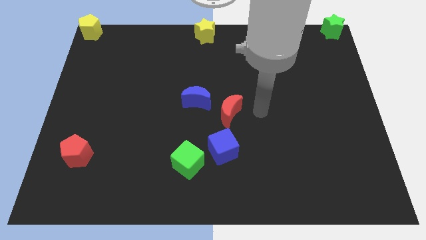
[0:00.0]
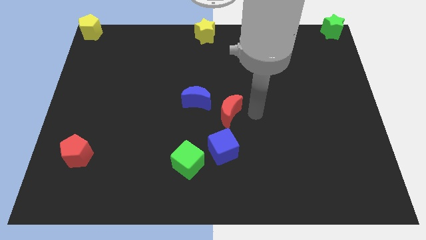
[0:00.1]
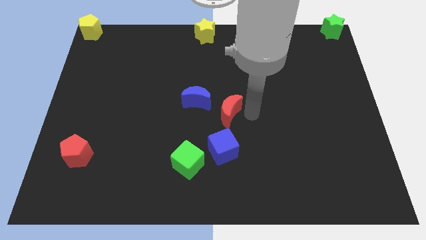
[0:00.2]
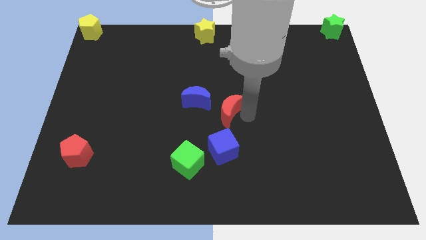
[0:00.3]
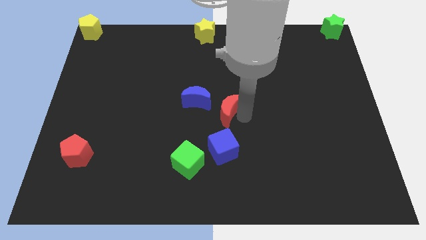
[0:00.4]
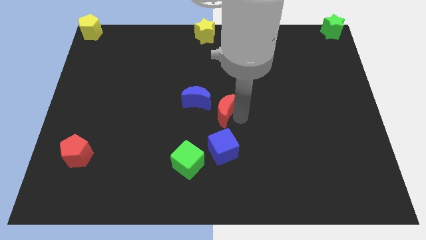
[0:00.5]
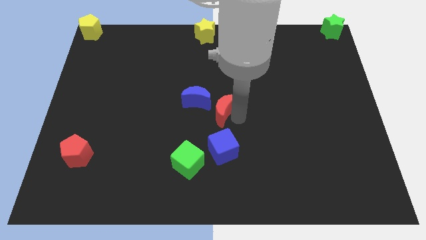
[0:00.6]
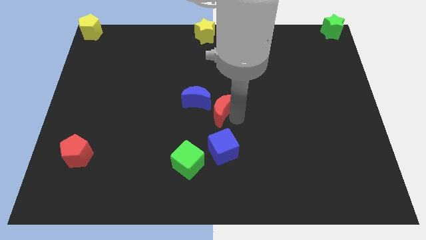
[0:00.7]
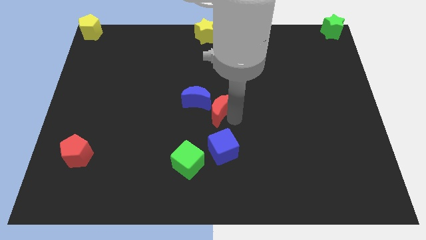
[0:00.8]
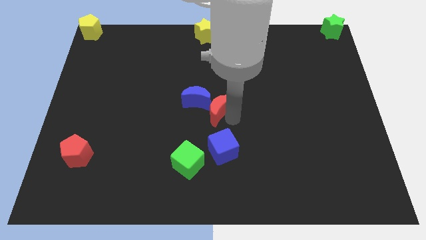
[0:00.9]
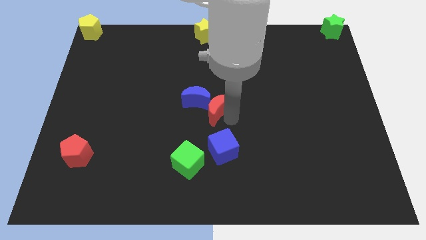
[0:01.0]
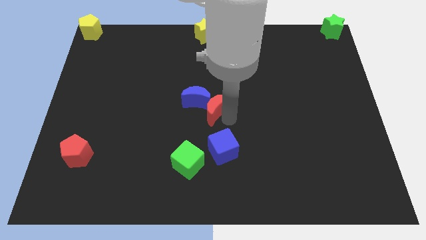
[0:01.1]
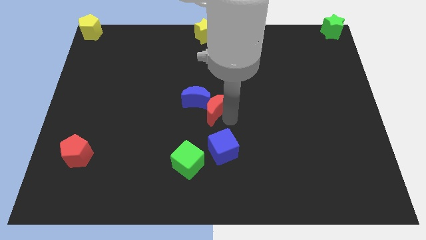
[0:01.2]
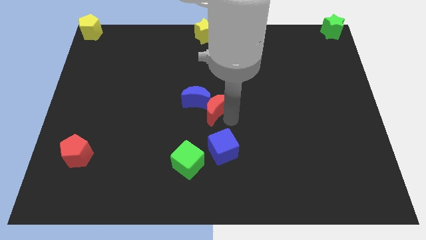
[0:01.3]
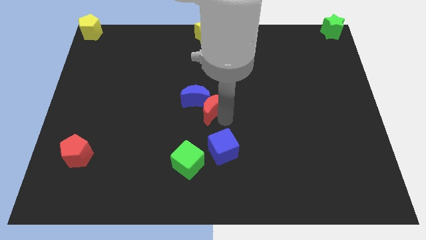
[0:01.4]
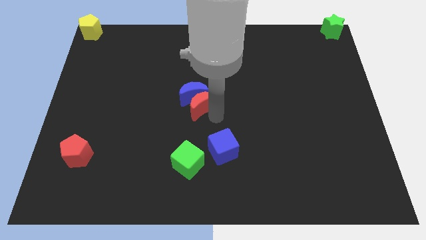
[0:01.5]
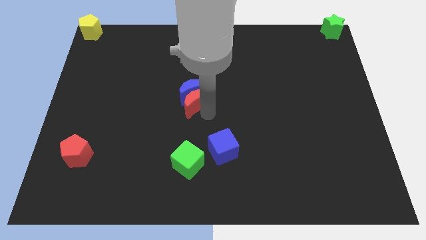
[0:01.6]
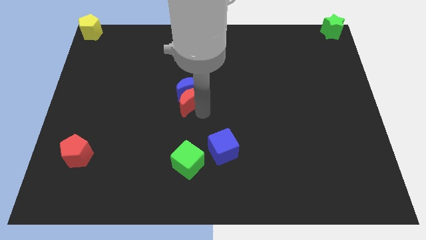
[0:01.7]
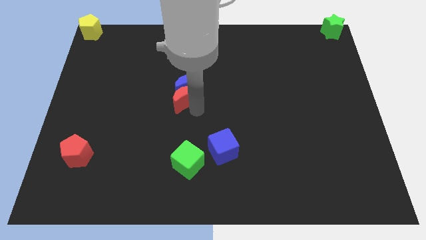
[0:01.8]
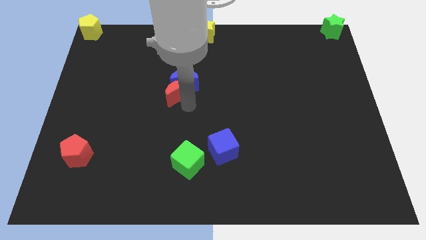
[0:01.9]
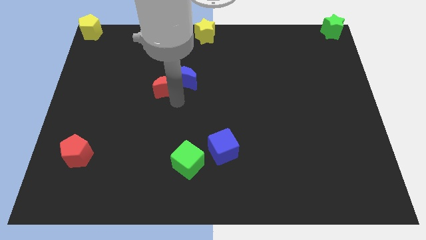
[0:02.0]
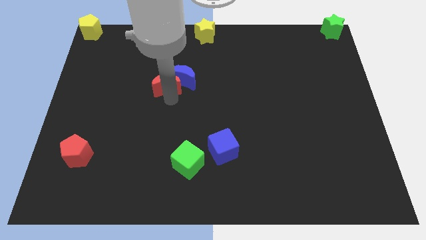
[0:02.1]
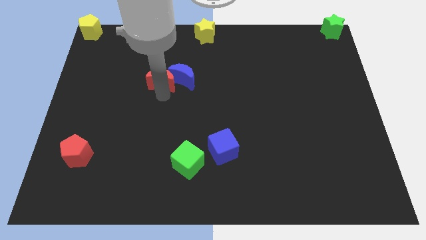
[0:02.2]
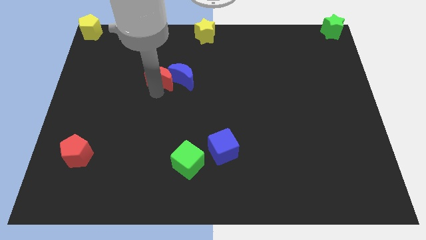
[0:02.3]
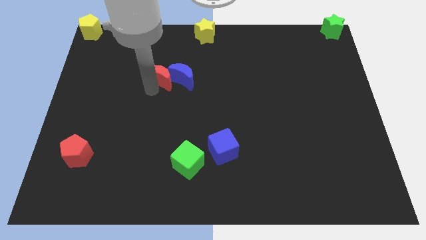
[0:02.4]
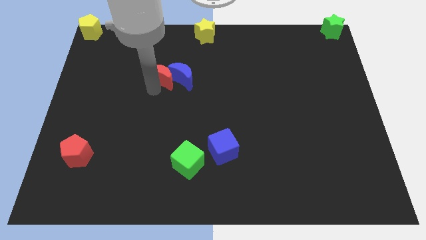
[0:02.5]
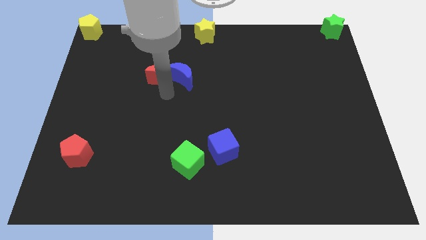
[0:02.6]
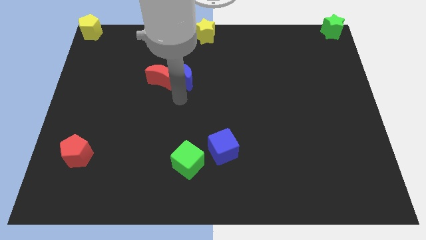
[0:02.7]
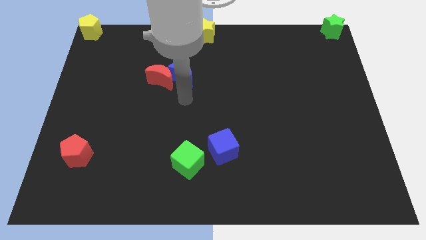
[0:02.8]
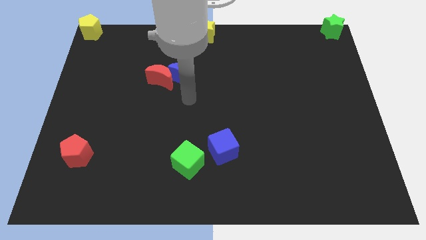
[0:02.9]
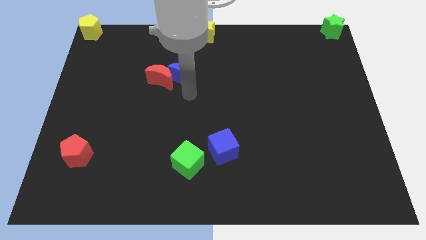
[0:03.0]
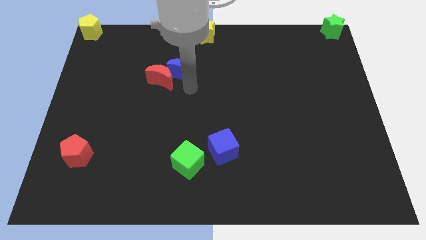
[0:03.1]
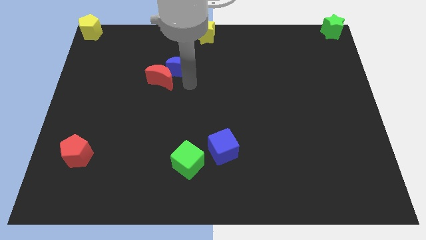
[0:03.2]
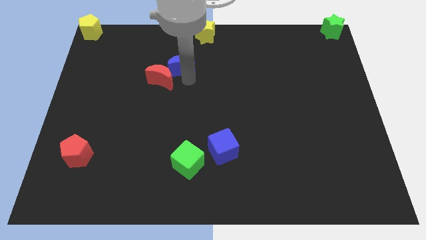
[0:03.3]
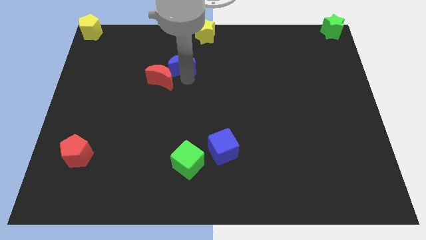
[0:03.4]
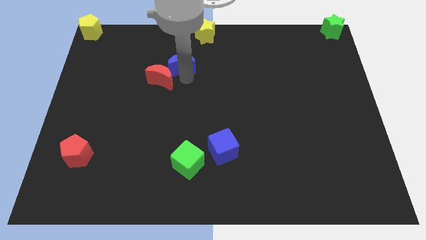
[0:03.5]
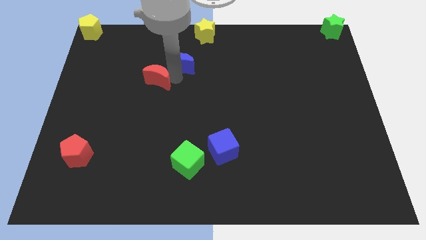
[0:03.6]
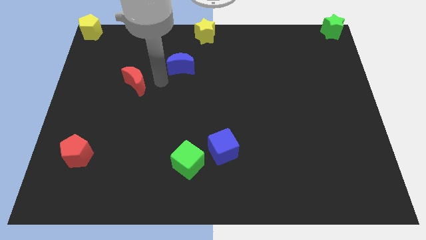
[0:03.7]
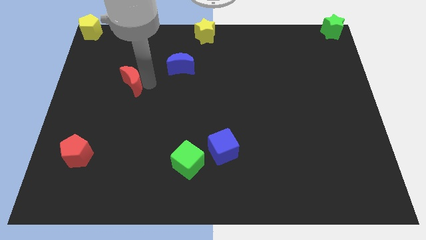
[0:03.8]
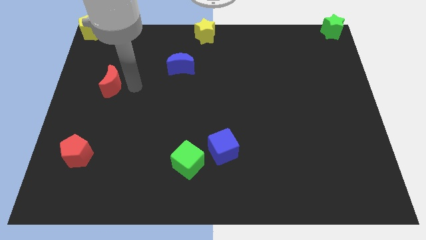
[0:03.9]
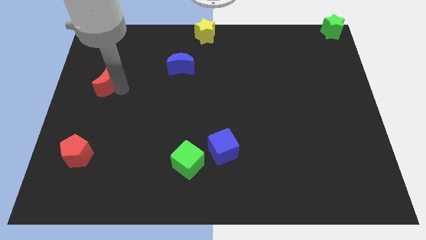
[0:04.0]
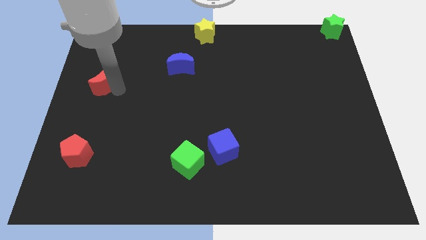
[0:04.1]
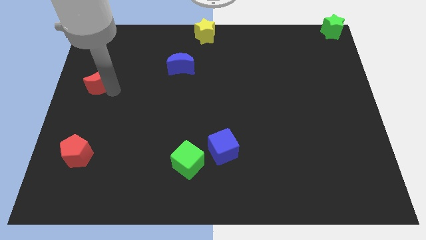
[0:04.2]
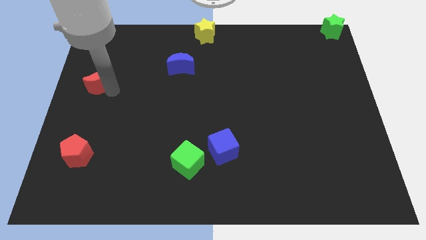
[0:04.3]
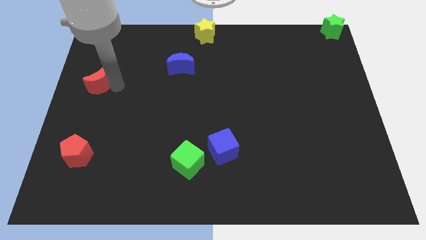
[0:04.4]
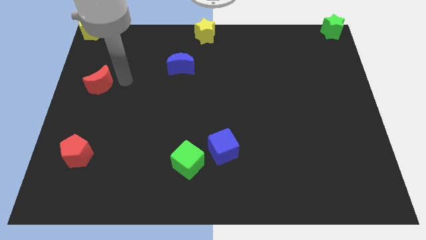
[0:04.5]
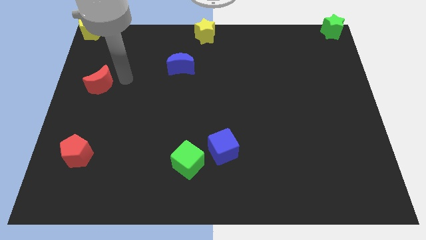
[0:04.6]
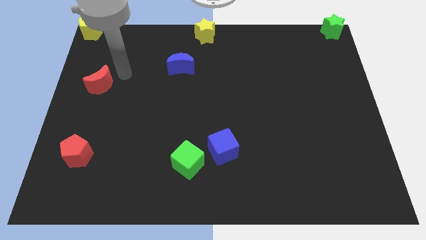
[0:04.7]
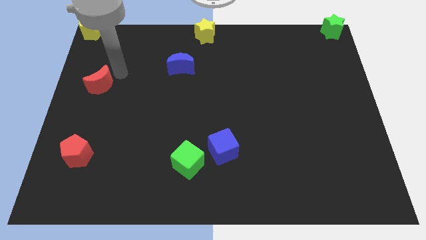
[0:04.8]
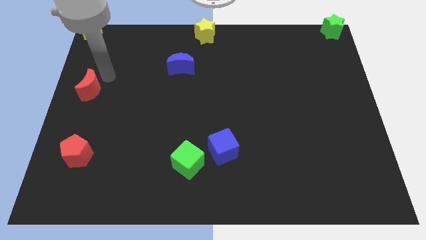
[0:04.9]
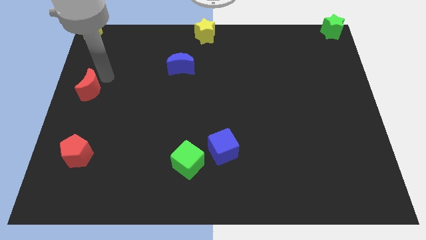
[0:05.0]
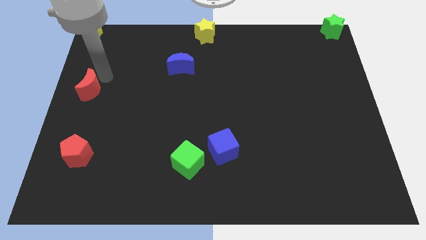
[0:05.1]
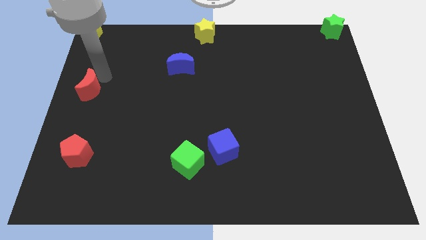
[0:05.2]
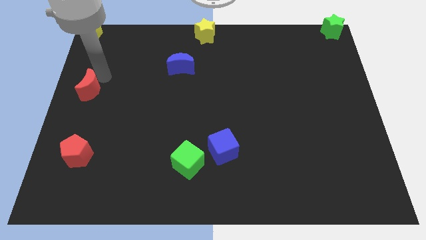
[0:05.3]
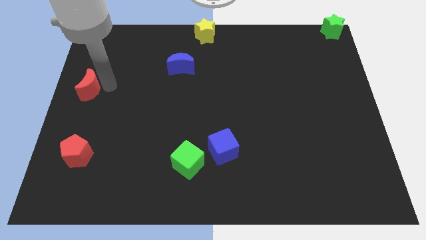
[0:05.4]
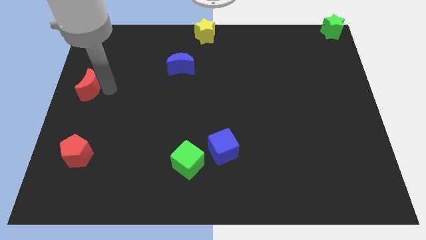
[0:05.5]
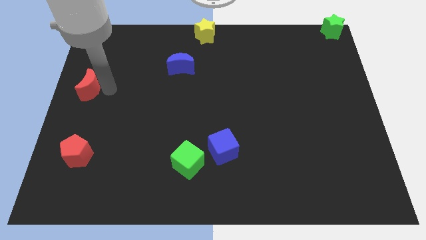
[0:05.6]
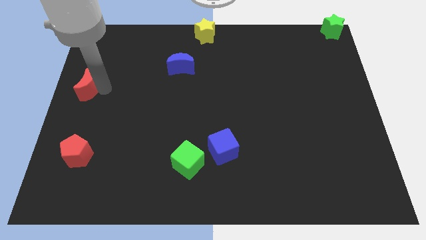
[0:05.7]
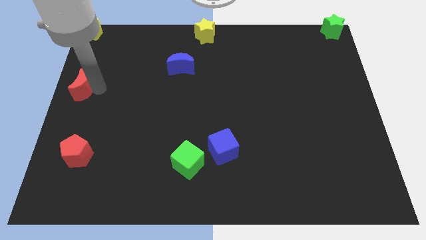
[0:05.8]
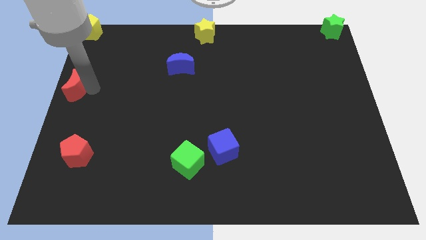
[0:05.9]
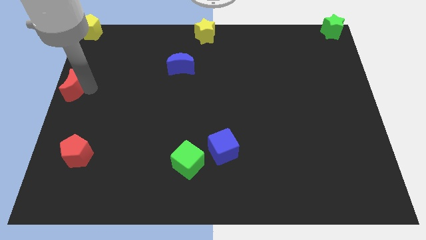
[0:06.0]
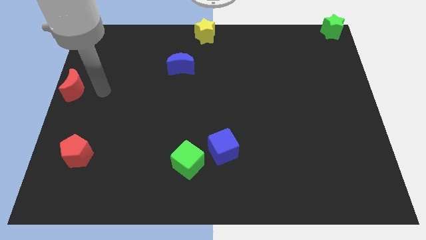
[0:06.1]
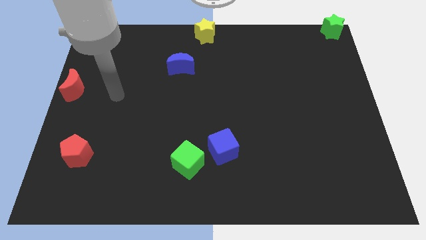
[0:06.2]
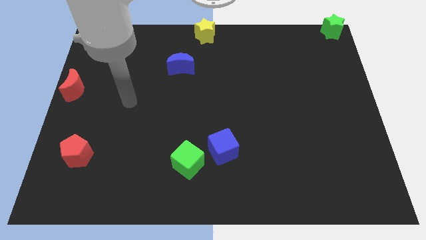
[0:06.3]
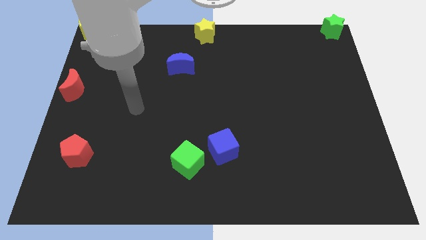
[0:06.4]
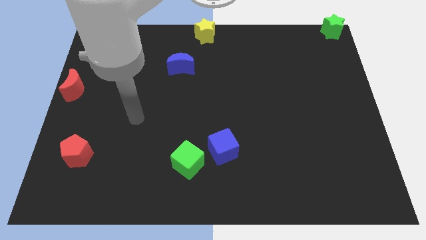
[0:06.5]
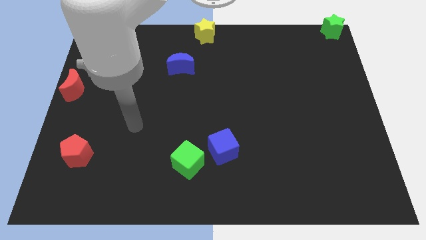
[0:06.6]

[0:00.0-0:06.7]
place the red crescent to the center left corner of the board

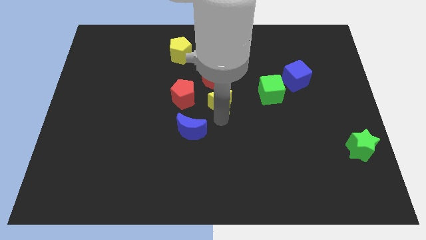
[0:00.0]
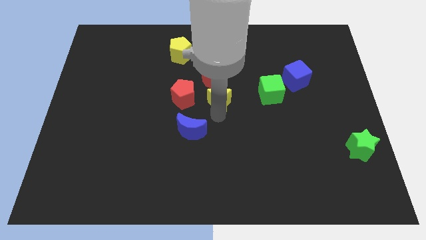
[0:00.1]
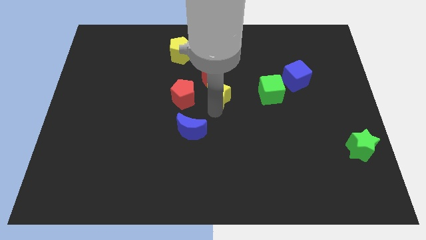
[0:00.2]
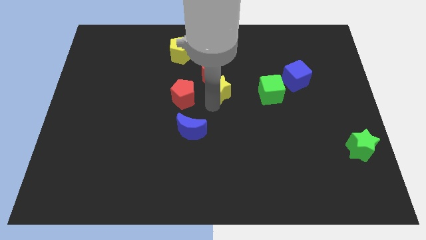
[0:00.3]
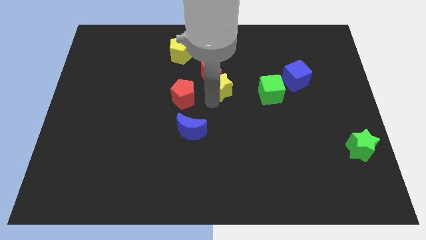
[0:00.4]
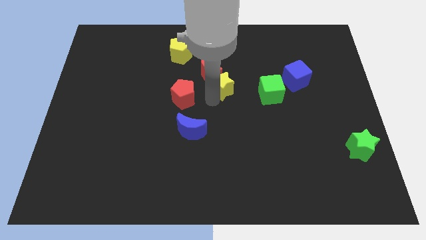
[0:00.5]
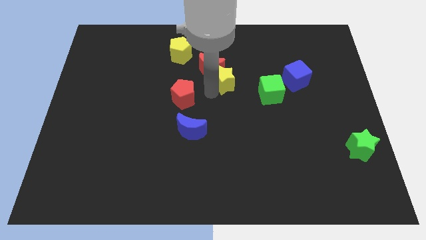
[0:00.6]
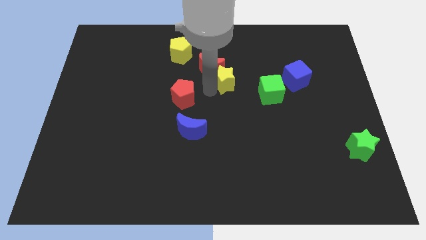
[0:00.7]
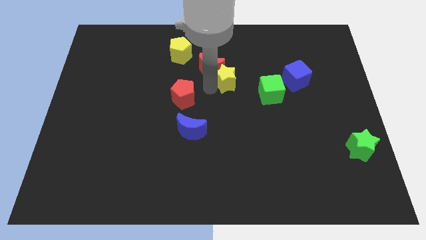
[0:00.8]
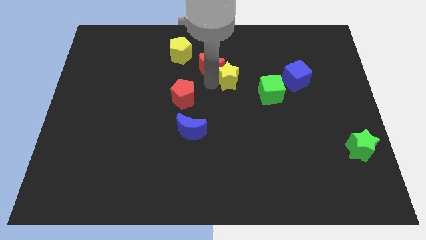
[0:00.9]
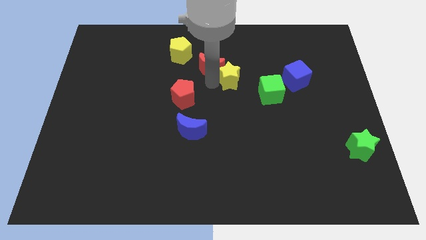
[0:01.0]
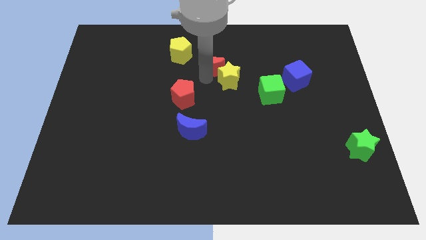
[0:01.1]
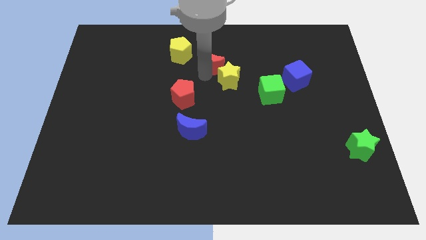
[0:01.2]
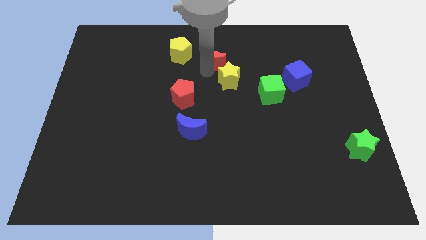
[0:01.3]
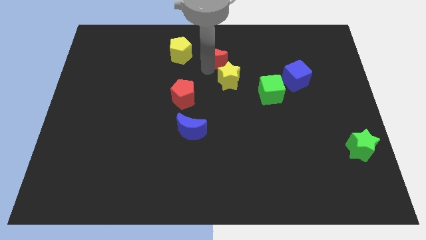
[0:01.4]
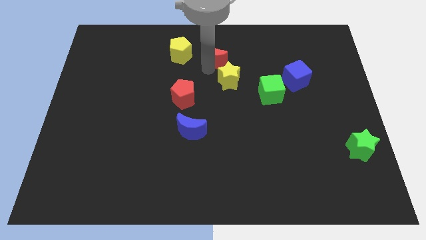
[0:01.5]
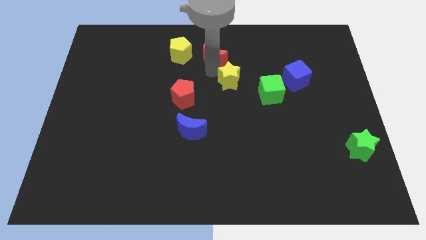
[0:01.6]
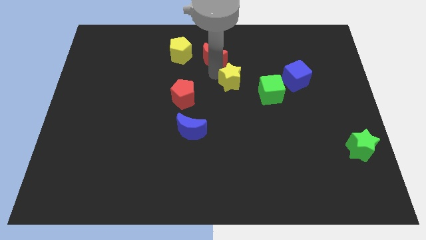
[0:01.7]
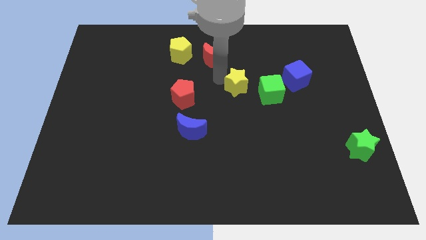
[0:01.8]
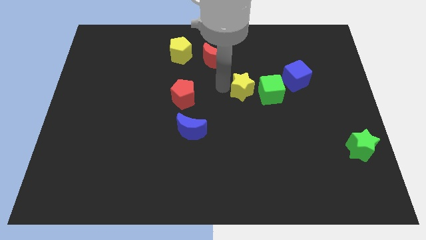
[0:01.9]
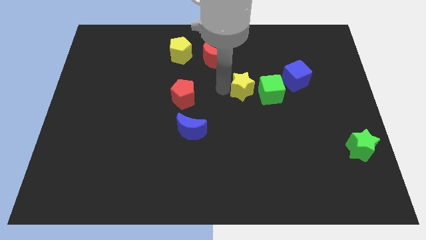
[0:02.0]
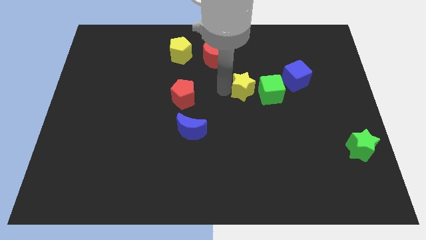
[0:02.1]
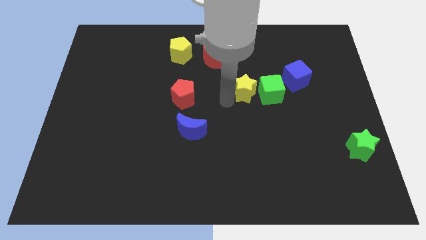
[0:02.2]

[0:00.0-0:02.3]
separate the red moon and yellow star
